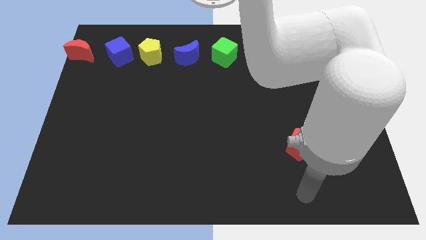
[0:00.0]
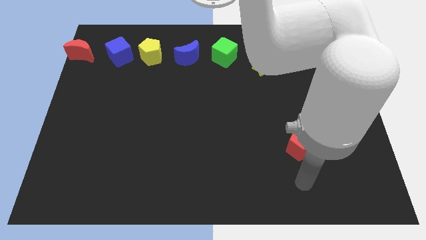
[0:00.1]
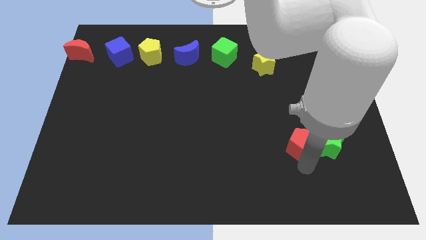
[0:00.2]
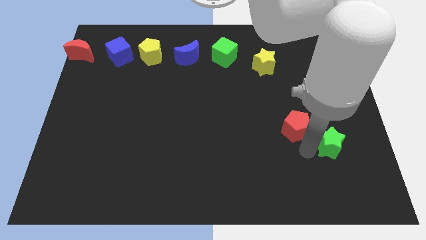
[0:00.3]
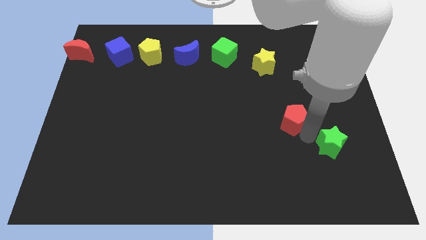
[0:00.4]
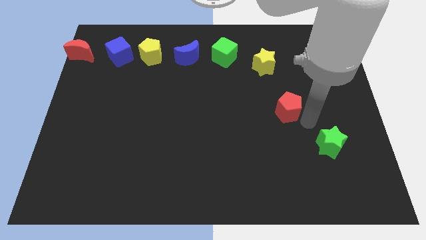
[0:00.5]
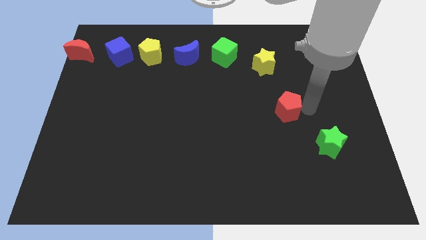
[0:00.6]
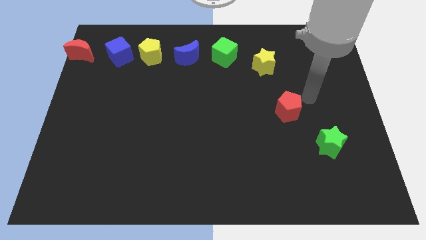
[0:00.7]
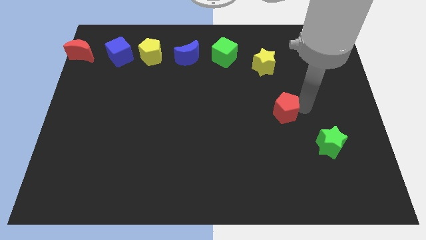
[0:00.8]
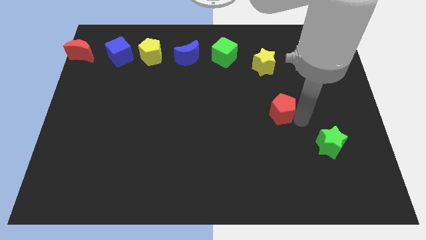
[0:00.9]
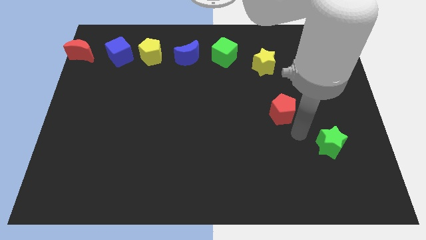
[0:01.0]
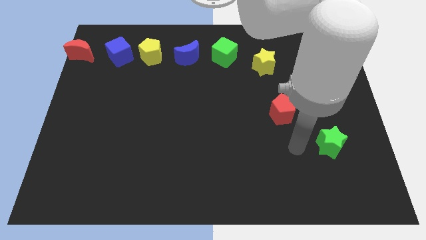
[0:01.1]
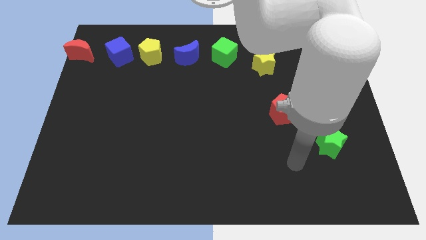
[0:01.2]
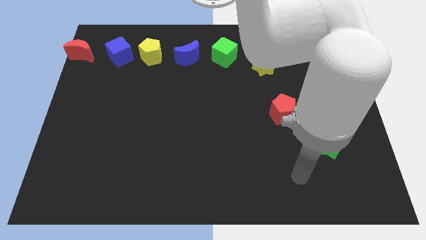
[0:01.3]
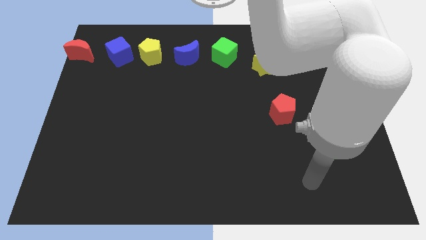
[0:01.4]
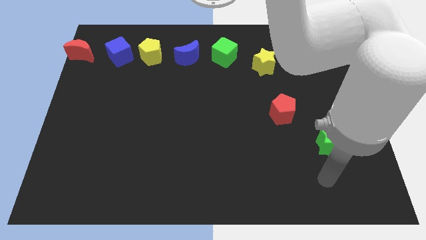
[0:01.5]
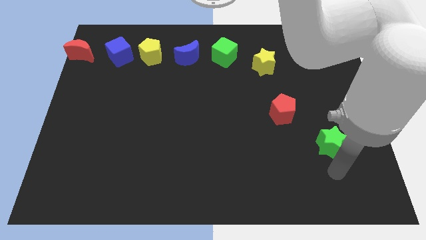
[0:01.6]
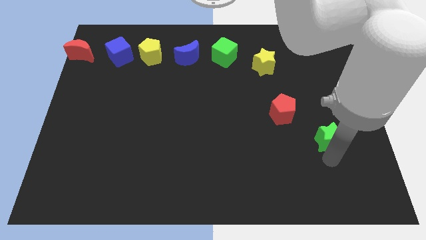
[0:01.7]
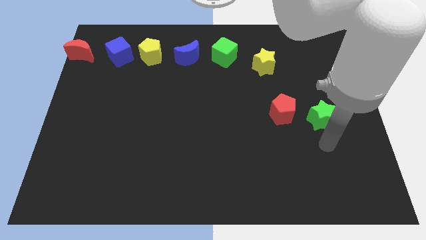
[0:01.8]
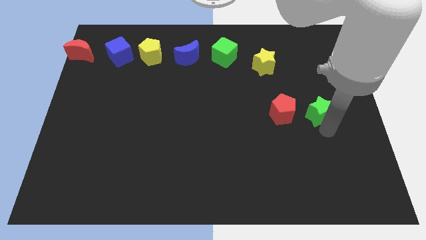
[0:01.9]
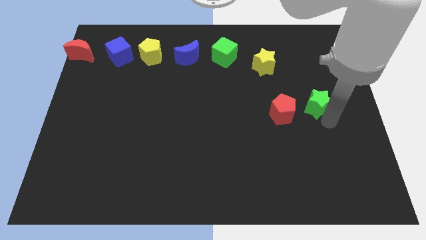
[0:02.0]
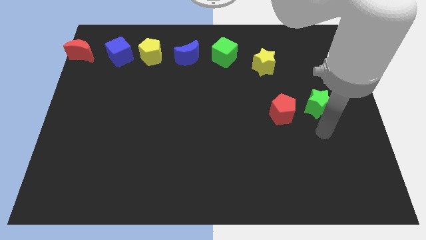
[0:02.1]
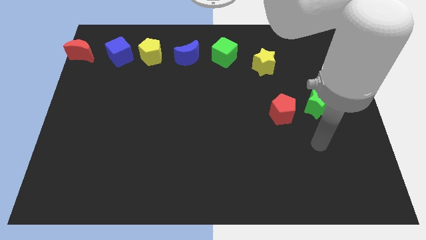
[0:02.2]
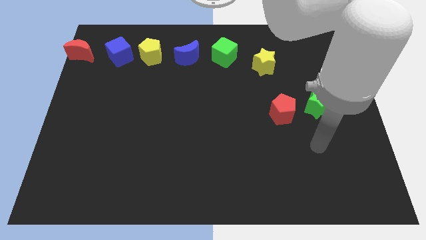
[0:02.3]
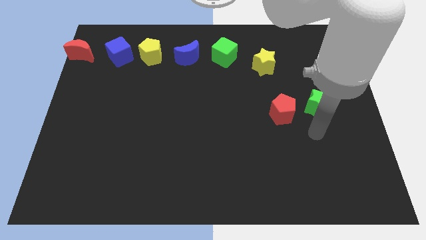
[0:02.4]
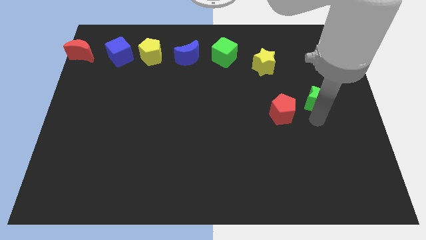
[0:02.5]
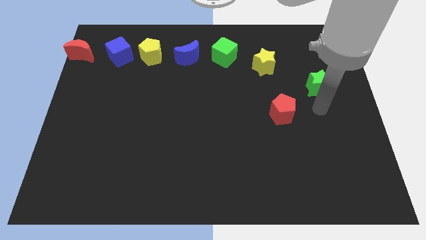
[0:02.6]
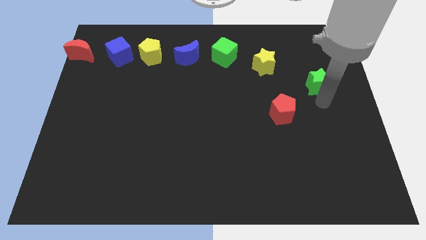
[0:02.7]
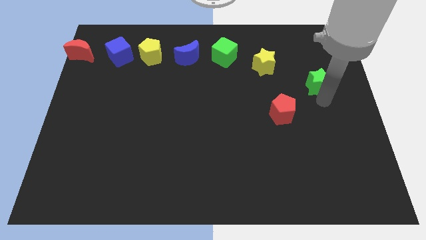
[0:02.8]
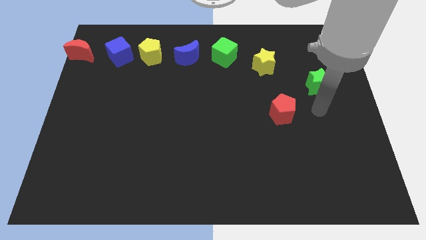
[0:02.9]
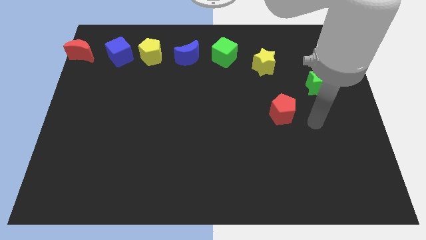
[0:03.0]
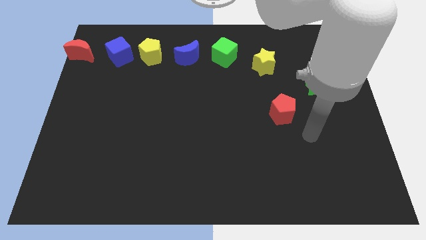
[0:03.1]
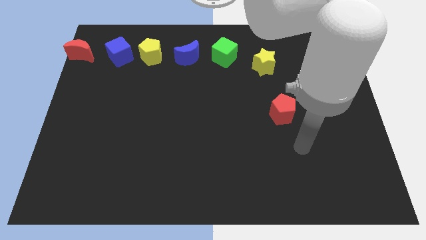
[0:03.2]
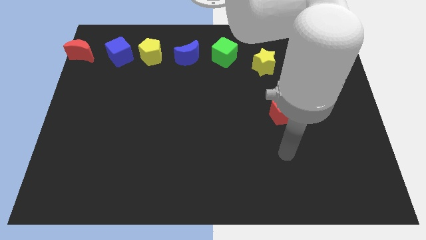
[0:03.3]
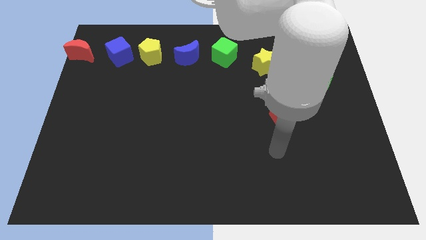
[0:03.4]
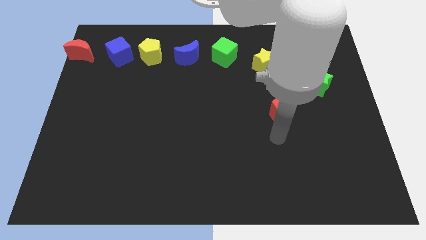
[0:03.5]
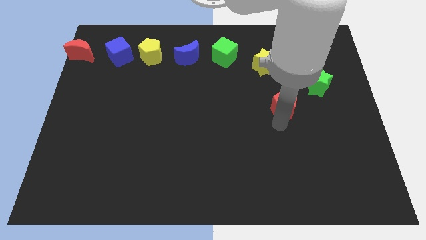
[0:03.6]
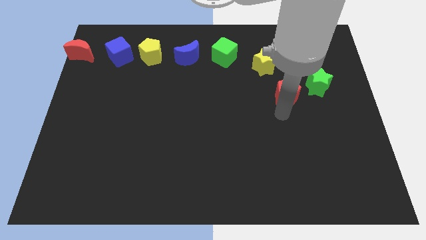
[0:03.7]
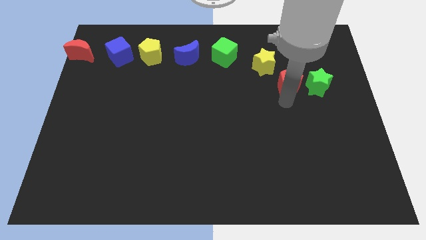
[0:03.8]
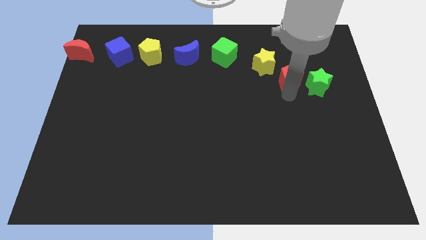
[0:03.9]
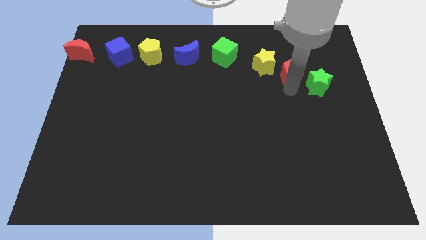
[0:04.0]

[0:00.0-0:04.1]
slide the red pentagon and green star diagonally on the bottom right side of the yellow star

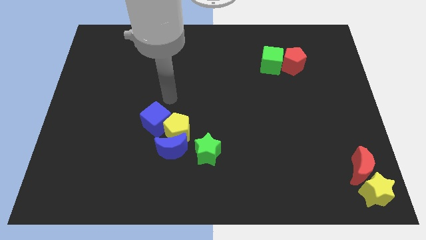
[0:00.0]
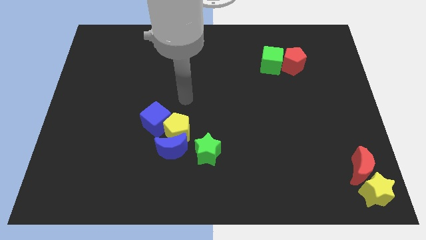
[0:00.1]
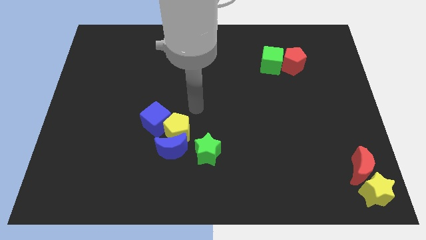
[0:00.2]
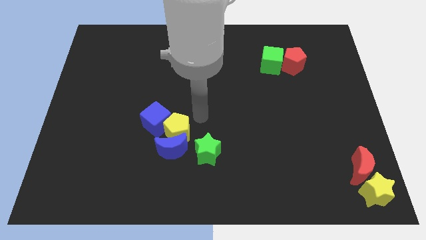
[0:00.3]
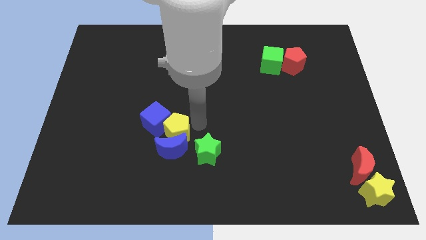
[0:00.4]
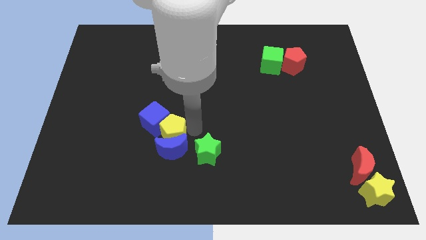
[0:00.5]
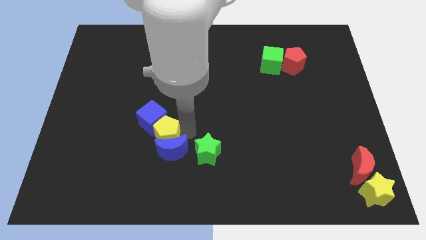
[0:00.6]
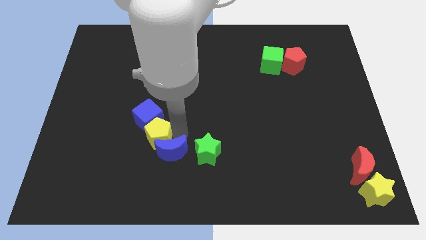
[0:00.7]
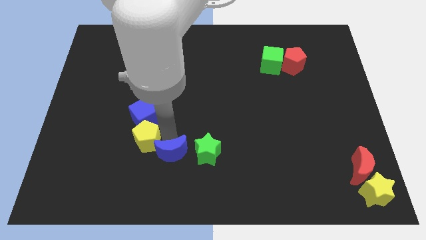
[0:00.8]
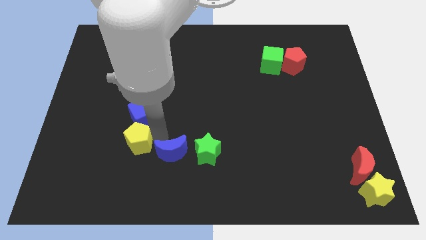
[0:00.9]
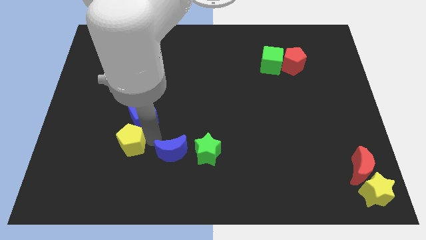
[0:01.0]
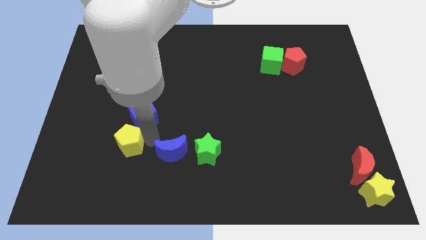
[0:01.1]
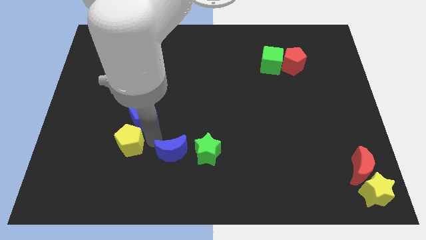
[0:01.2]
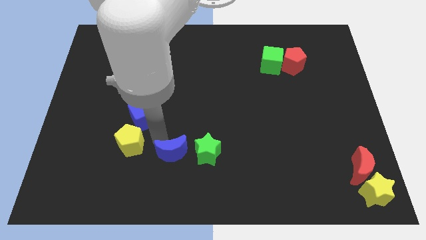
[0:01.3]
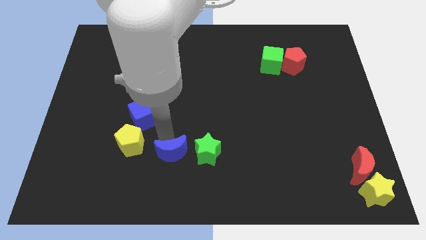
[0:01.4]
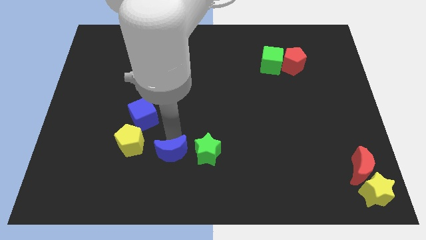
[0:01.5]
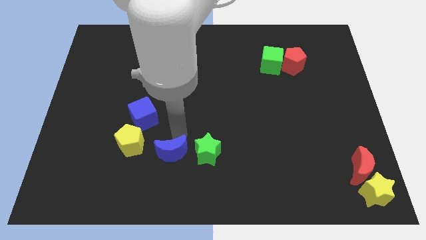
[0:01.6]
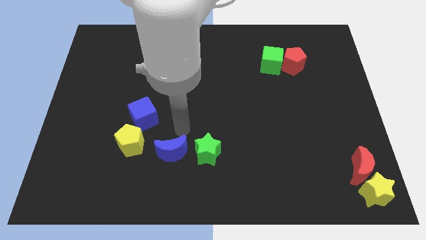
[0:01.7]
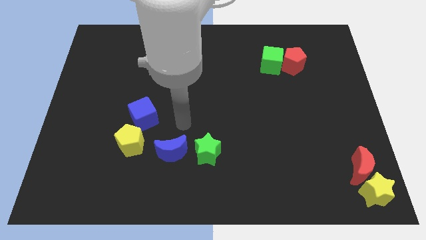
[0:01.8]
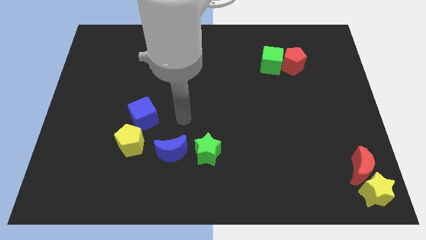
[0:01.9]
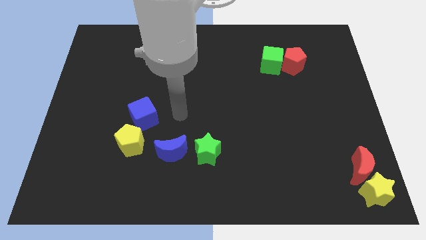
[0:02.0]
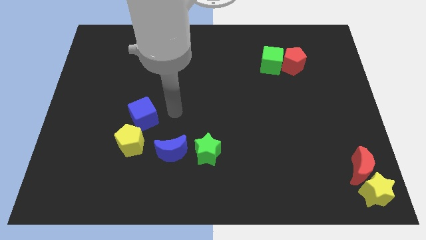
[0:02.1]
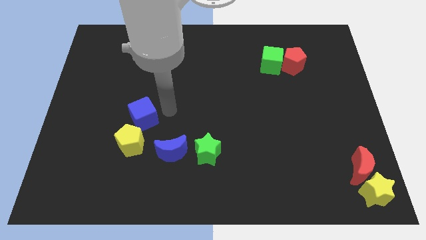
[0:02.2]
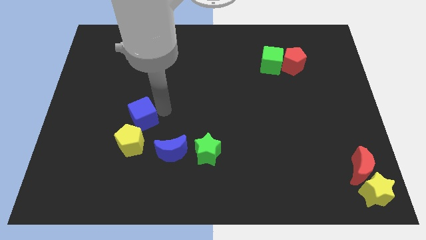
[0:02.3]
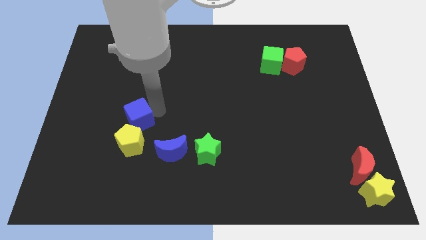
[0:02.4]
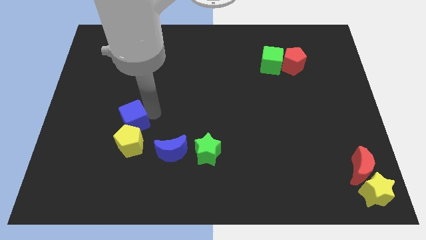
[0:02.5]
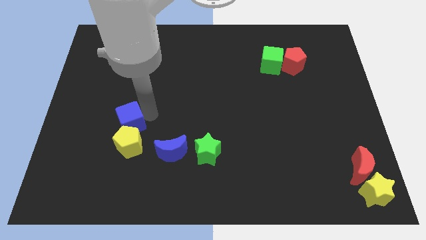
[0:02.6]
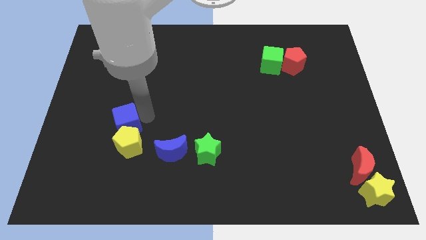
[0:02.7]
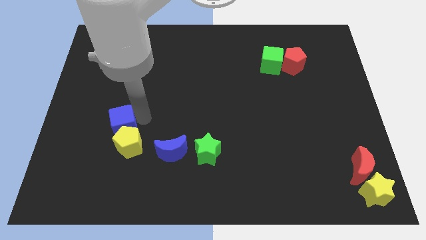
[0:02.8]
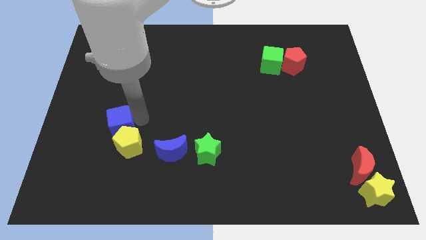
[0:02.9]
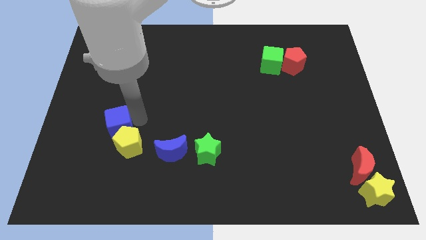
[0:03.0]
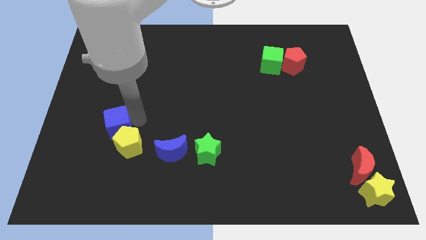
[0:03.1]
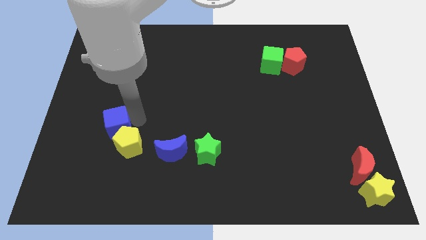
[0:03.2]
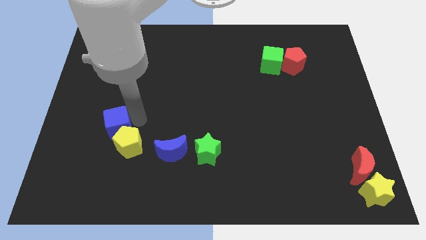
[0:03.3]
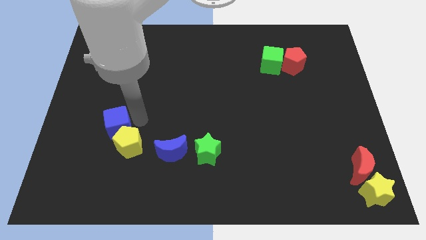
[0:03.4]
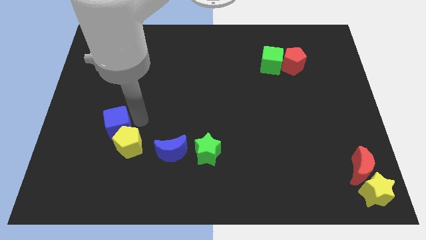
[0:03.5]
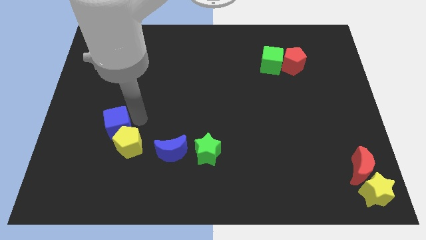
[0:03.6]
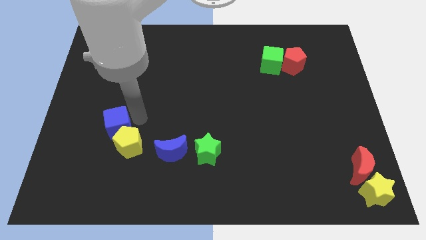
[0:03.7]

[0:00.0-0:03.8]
separate the yellow pentagon and blue cube

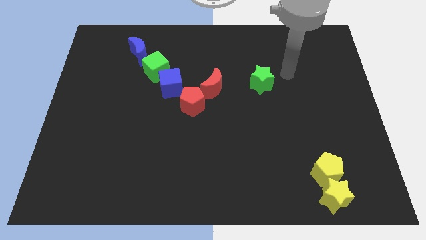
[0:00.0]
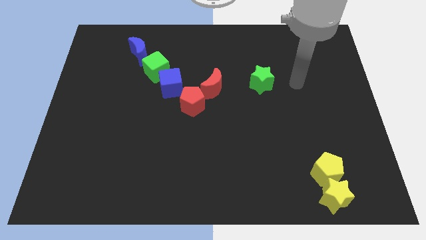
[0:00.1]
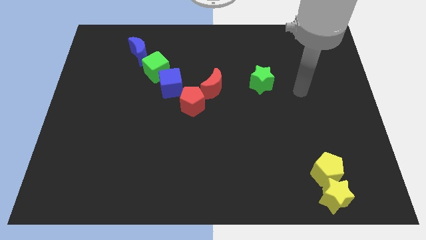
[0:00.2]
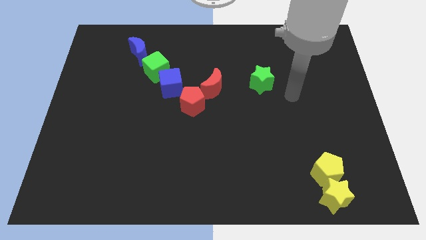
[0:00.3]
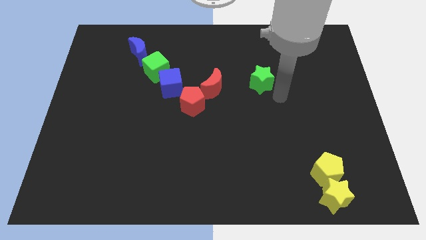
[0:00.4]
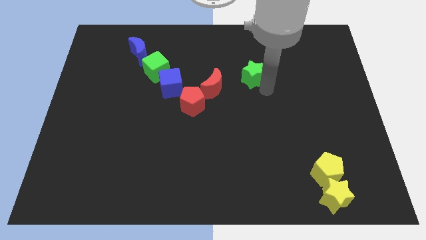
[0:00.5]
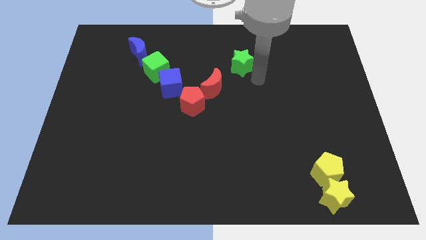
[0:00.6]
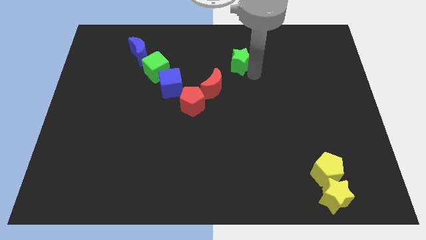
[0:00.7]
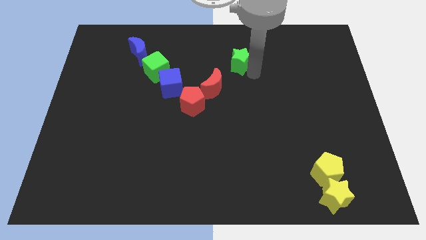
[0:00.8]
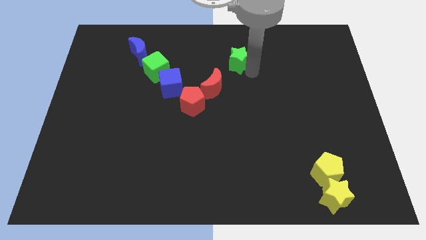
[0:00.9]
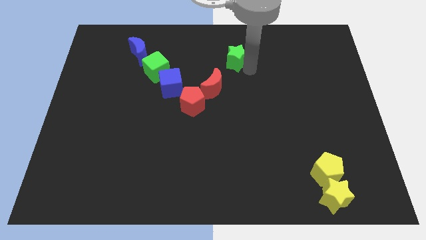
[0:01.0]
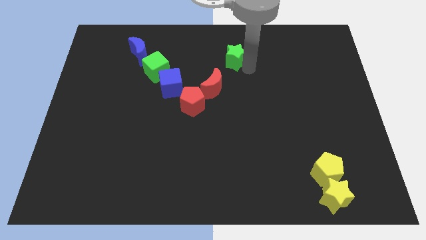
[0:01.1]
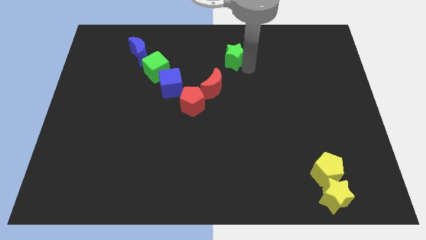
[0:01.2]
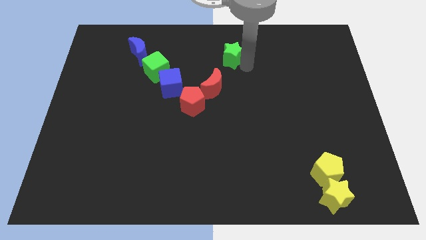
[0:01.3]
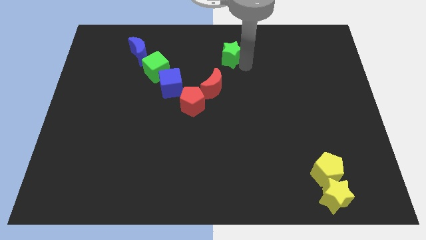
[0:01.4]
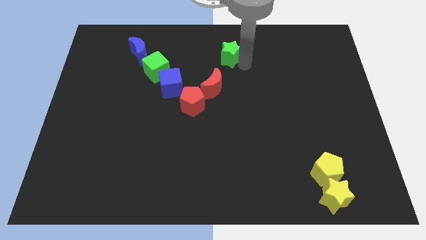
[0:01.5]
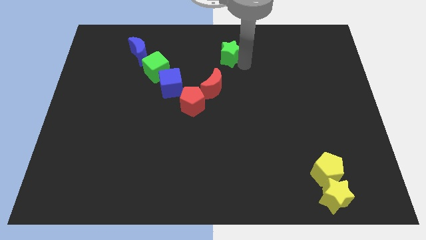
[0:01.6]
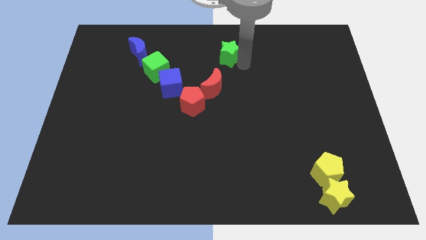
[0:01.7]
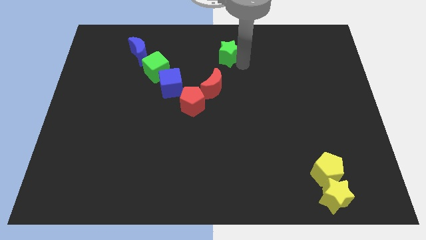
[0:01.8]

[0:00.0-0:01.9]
move the green star to the top right side of the red moon
